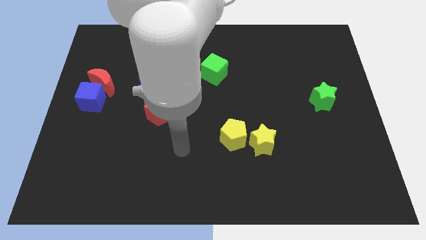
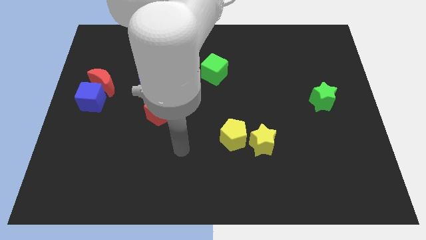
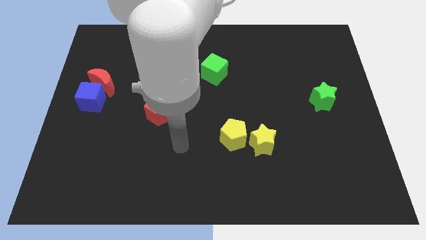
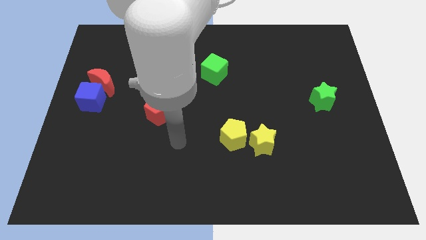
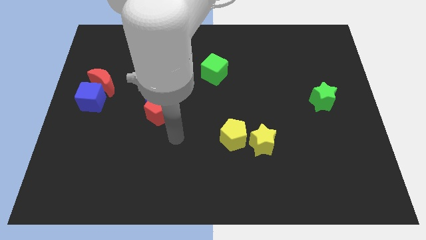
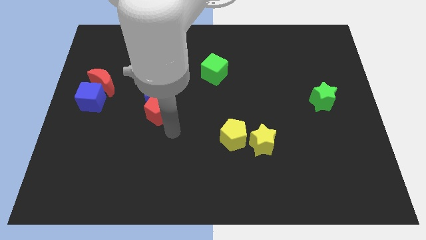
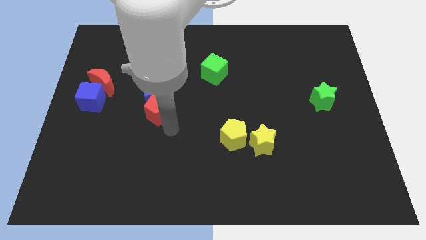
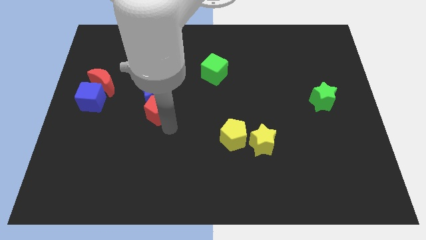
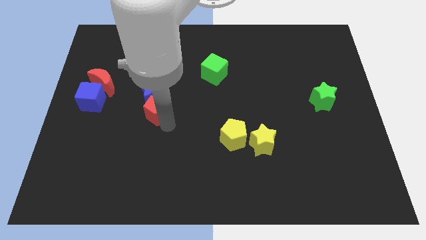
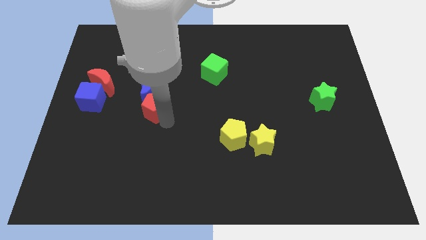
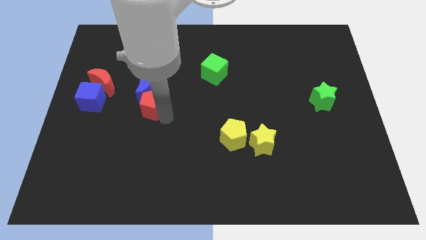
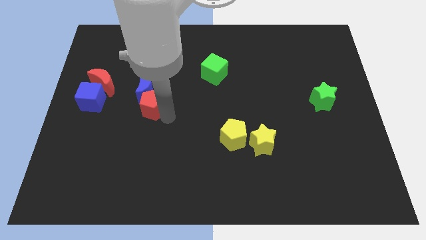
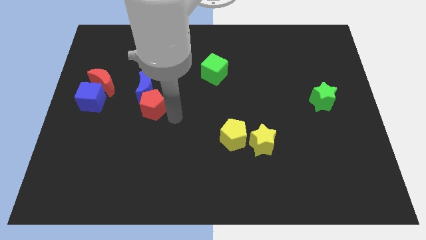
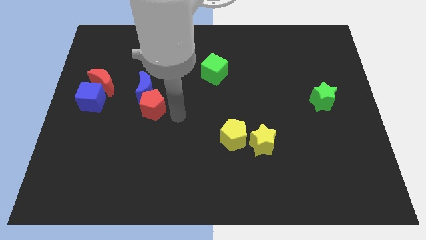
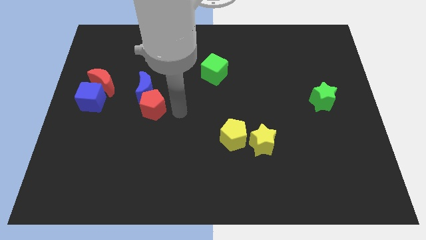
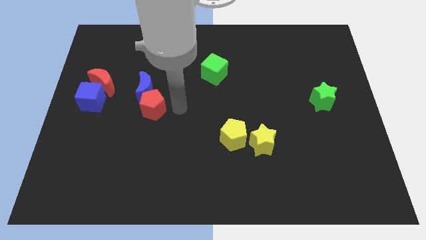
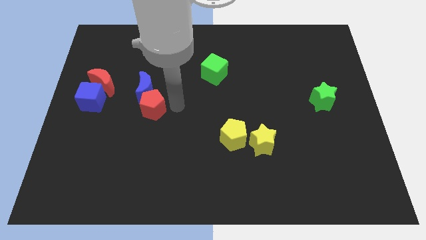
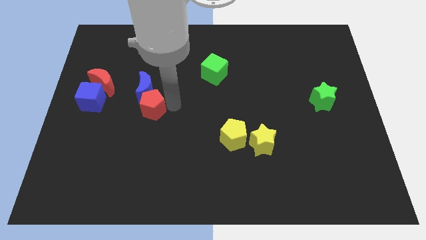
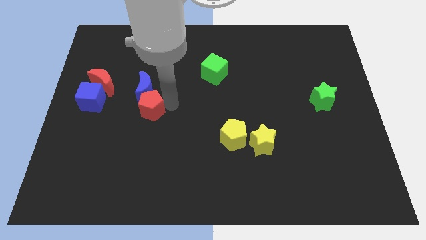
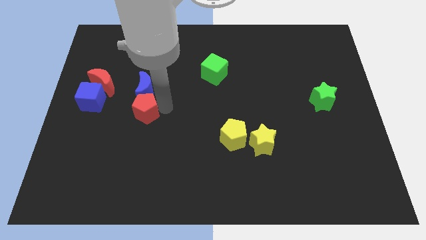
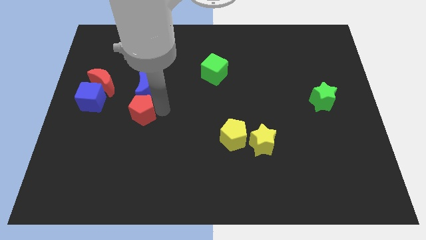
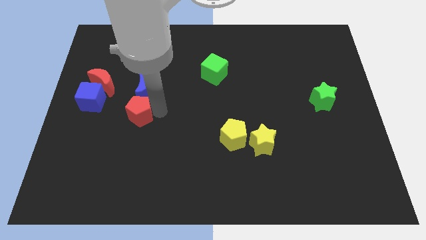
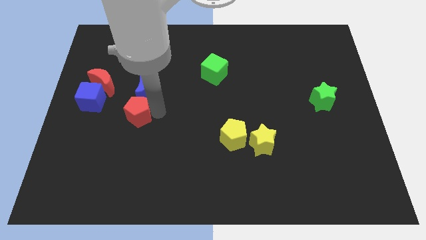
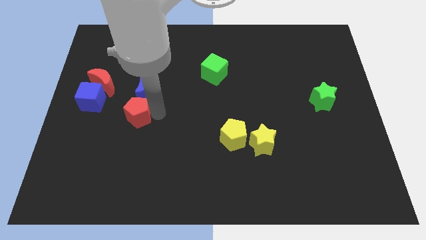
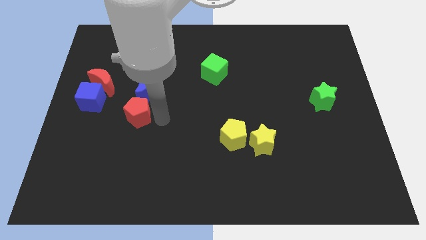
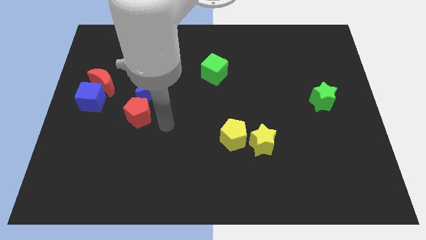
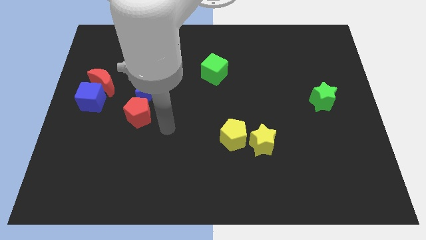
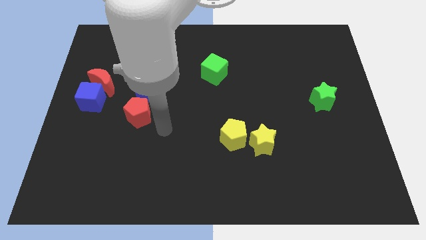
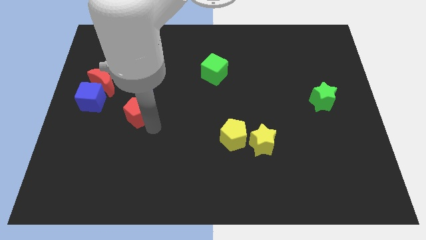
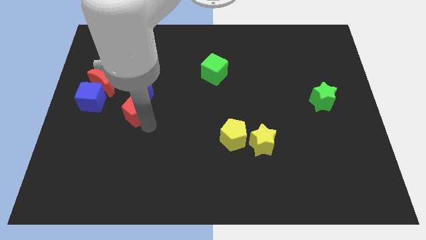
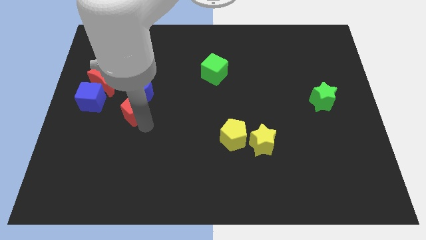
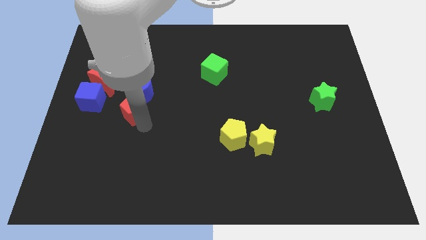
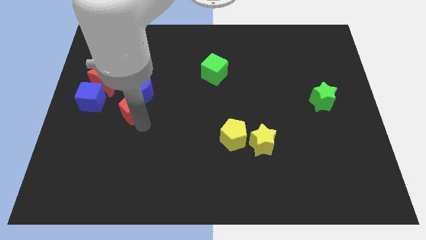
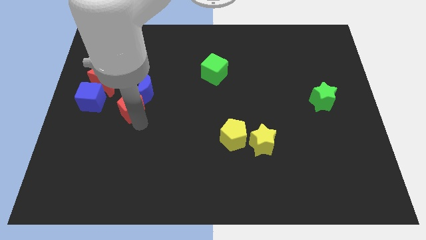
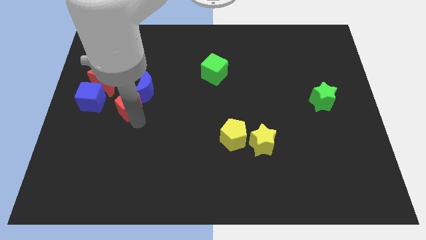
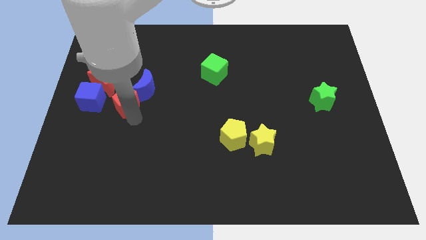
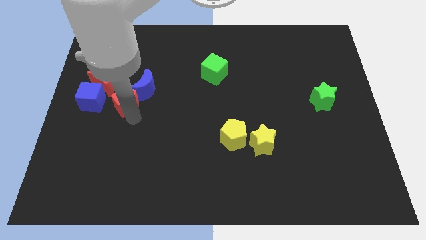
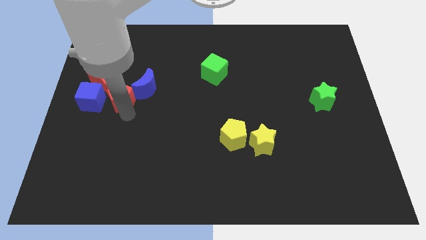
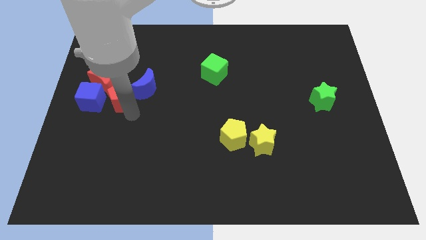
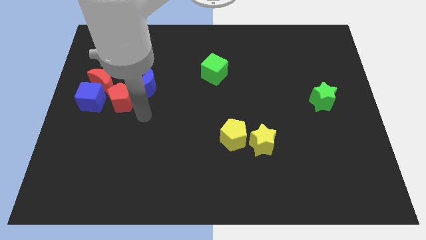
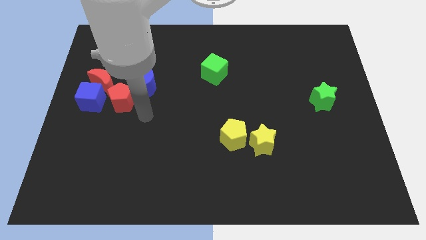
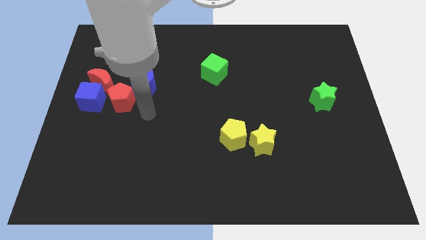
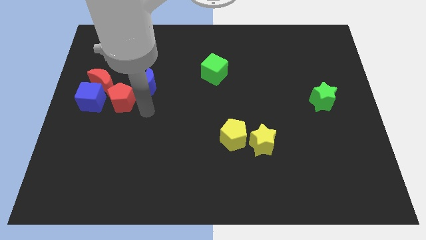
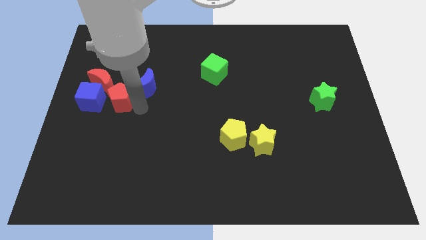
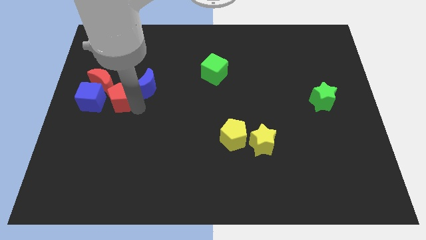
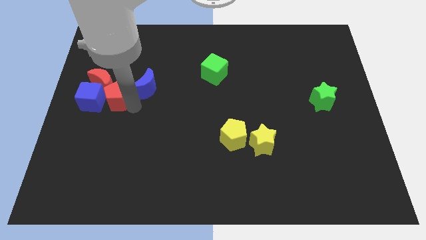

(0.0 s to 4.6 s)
put the red pentagon next to the blue cube

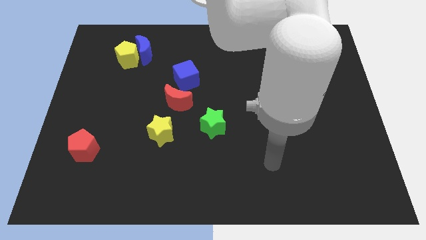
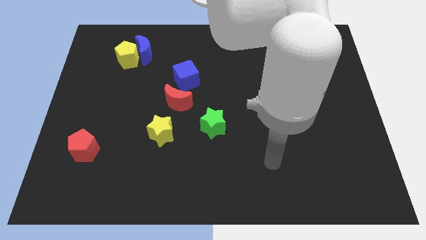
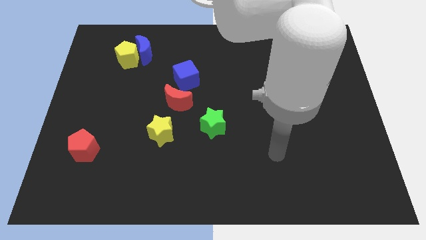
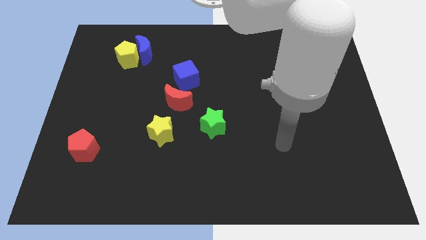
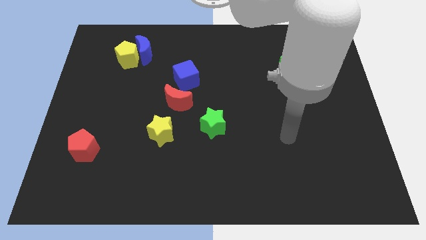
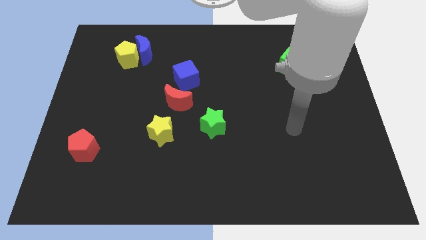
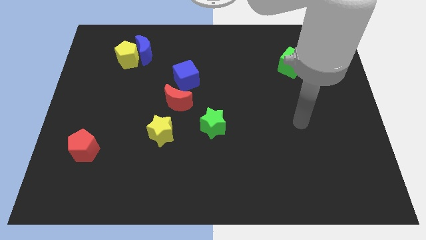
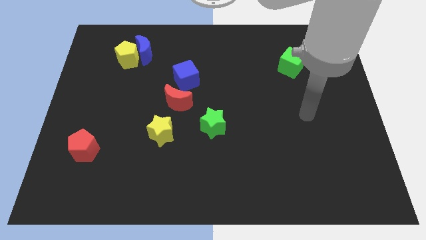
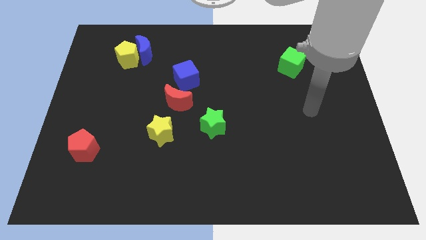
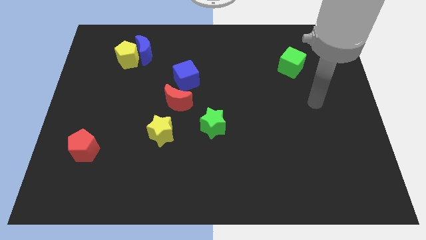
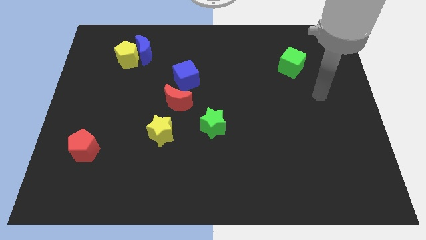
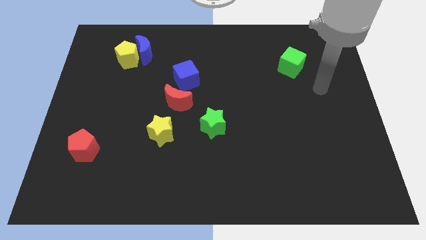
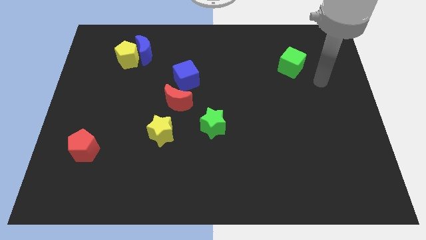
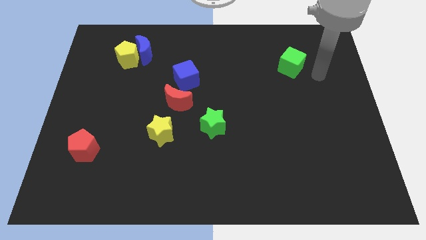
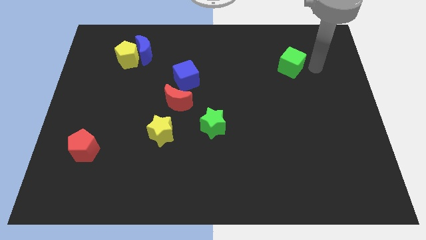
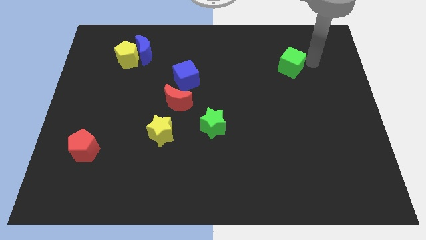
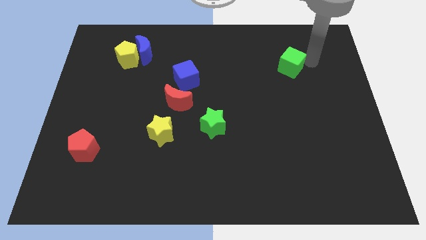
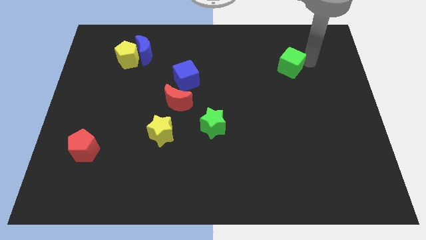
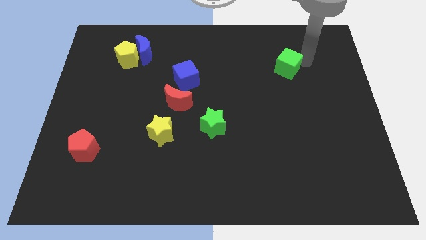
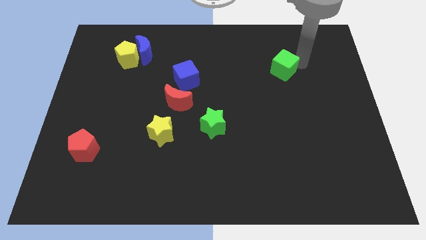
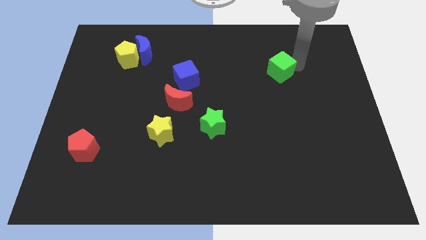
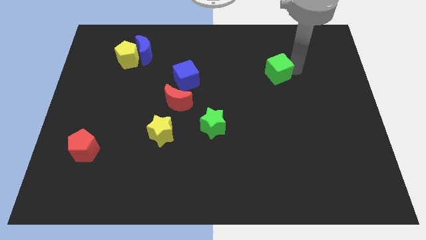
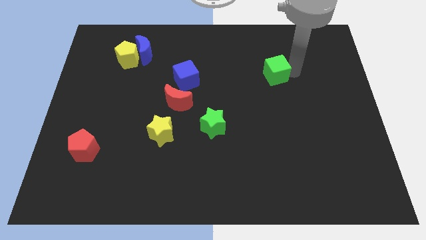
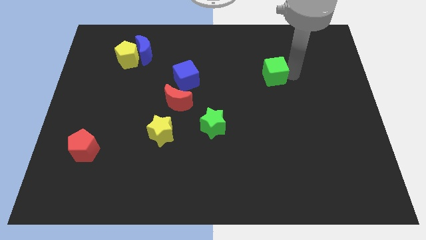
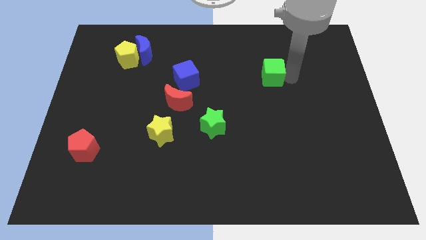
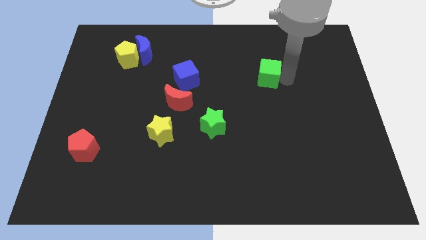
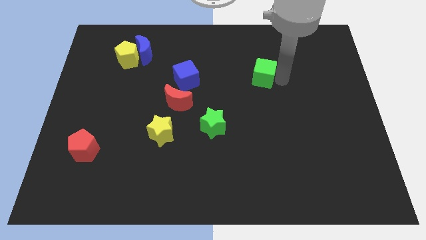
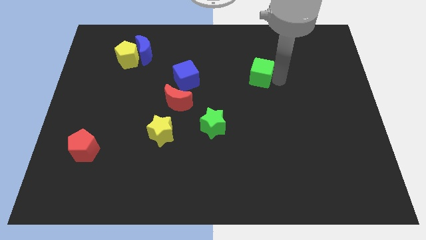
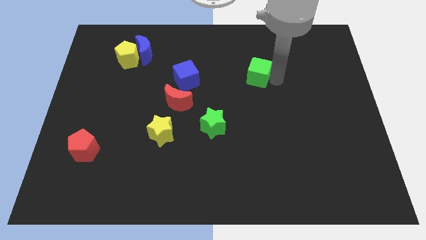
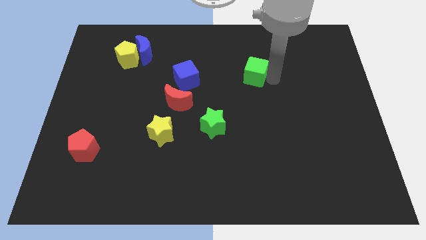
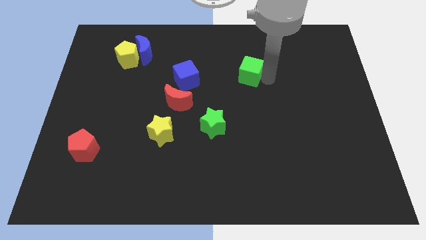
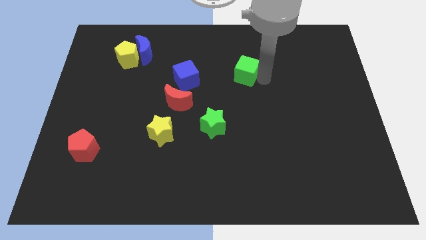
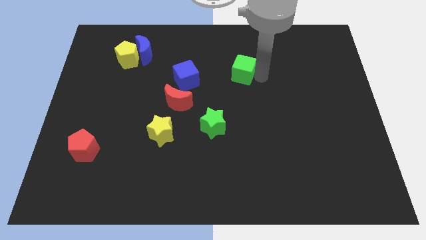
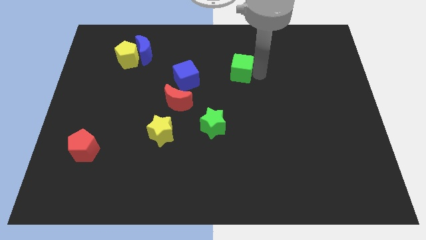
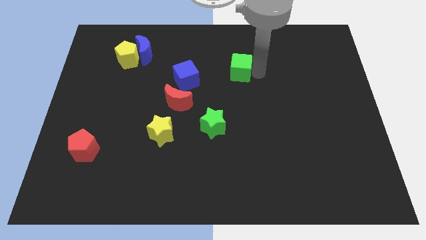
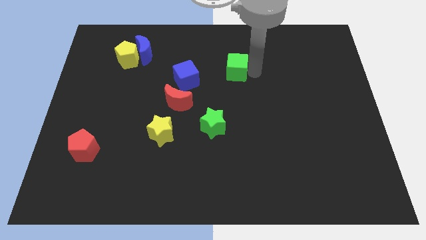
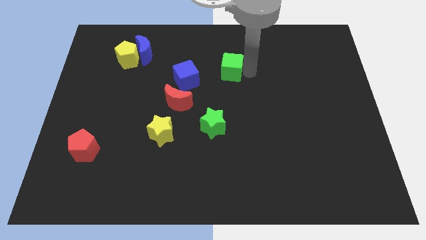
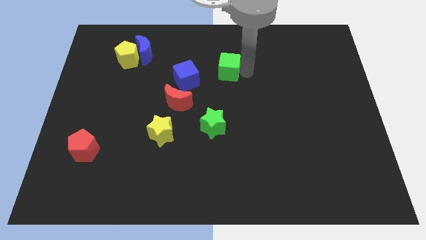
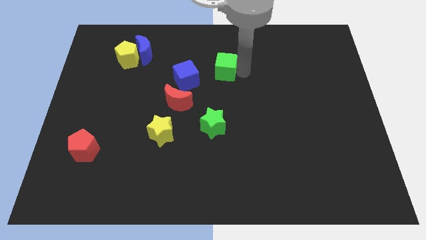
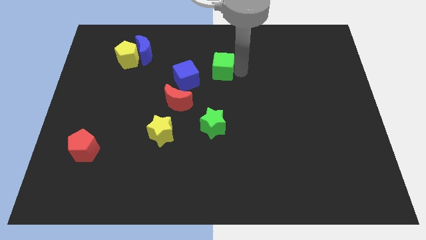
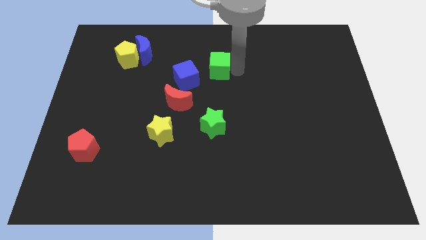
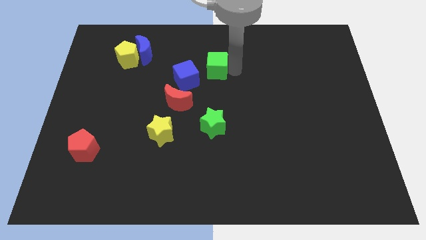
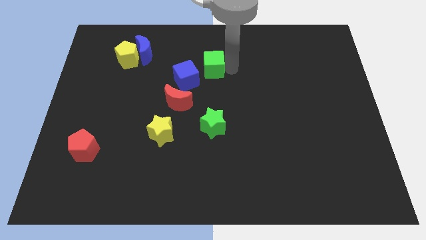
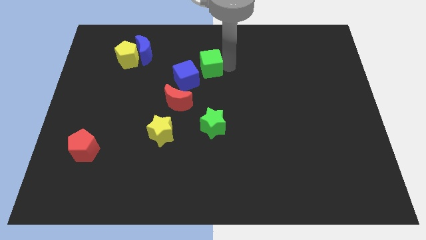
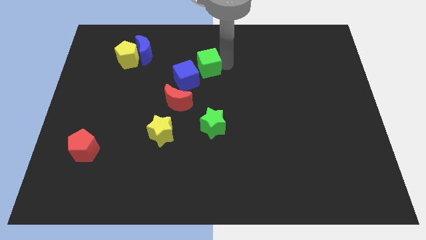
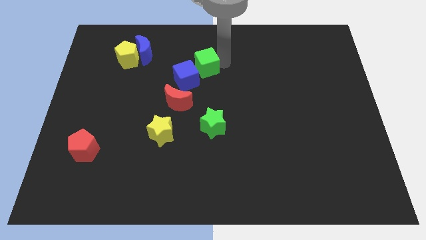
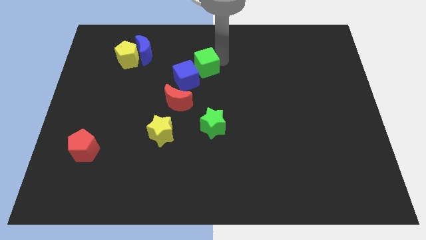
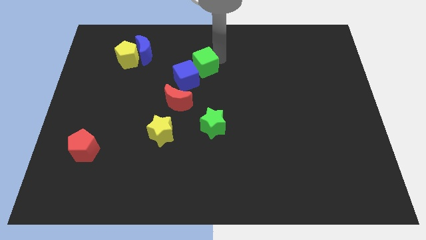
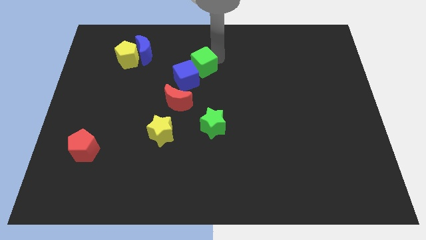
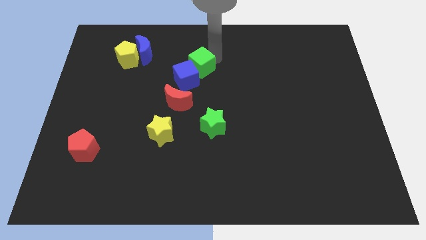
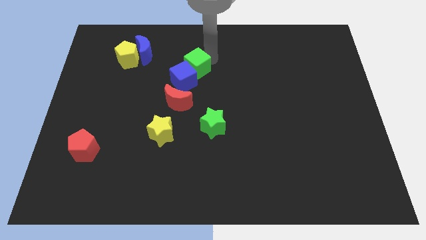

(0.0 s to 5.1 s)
slide the green cube to the blue cube
